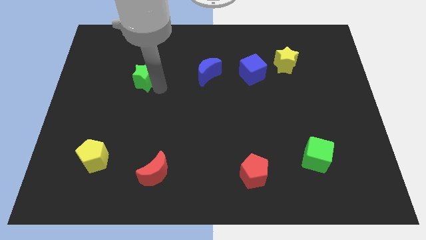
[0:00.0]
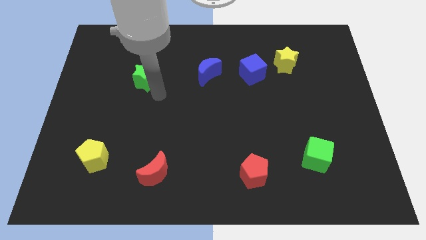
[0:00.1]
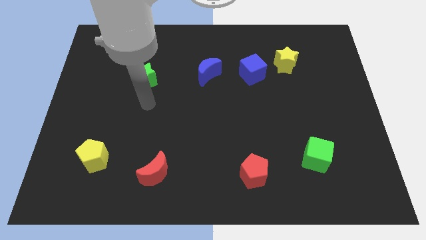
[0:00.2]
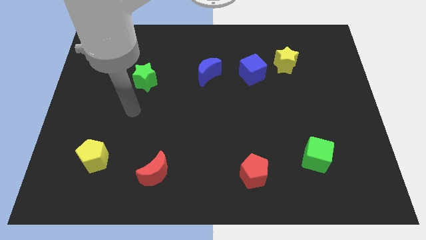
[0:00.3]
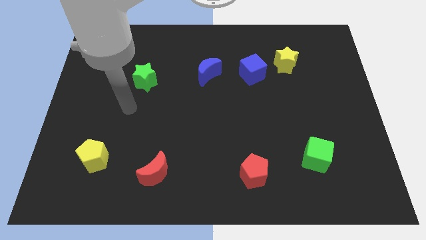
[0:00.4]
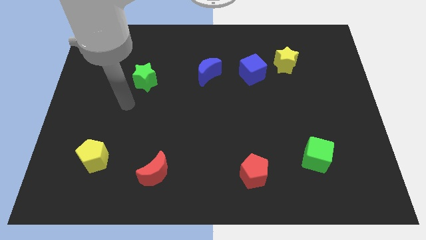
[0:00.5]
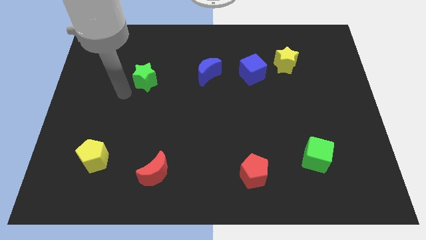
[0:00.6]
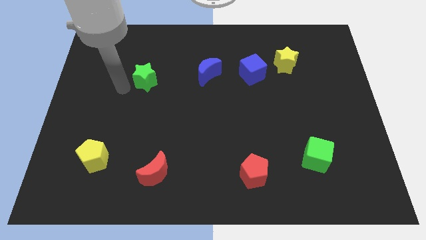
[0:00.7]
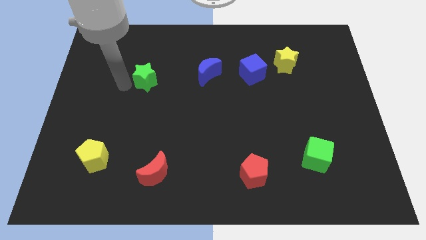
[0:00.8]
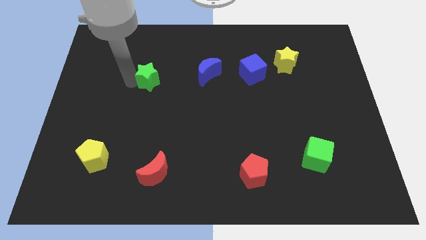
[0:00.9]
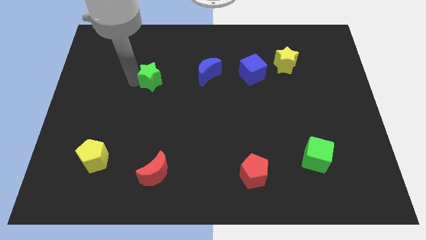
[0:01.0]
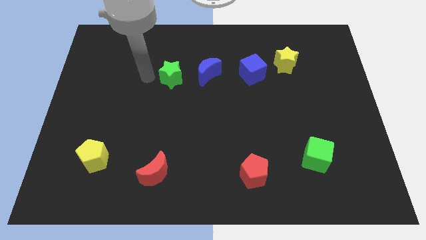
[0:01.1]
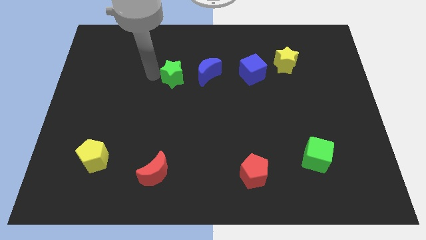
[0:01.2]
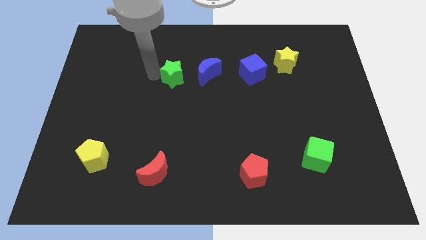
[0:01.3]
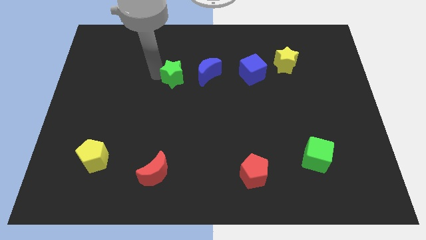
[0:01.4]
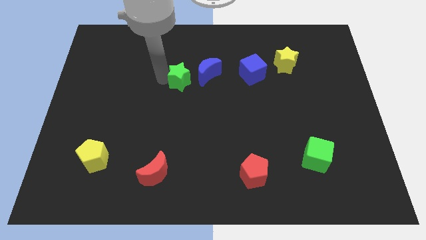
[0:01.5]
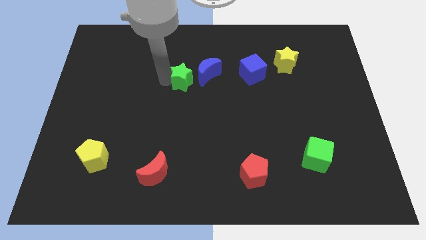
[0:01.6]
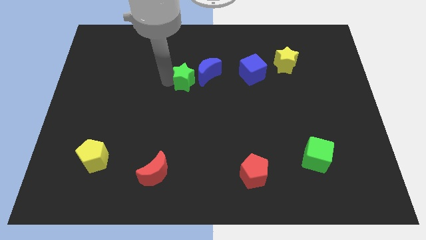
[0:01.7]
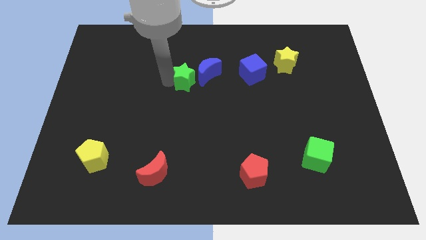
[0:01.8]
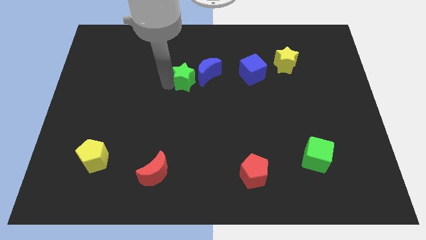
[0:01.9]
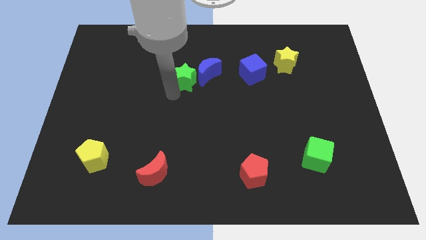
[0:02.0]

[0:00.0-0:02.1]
move the green star into the blue moon

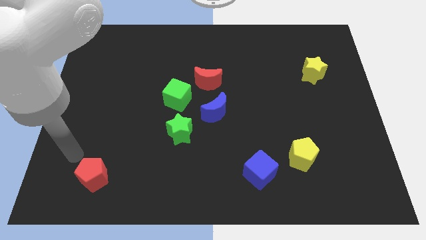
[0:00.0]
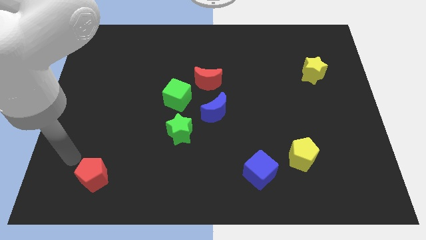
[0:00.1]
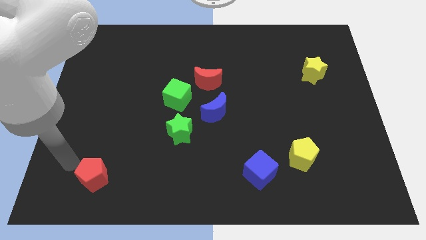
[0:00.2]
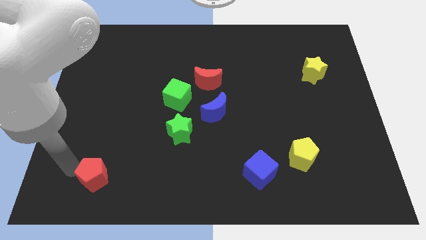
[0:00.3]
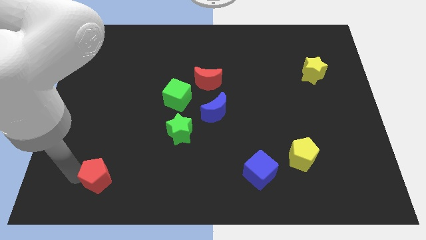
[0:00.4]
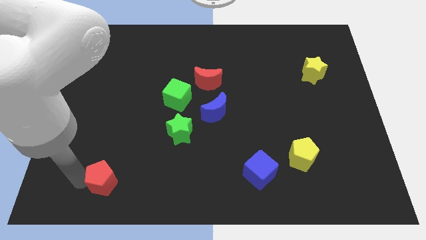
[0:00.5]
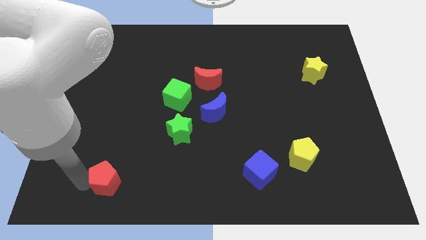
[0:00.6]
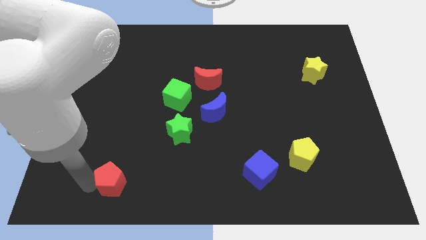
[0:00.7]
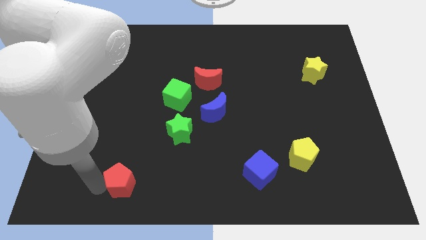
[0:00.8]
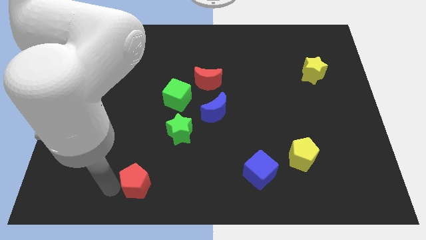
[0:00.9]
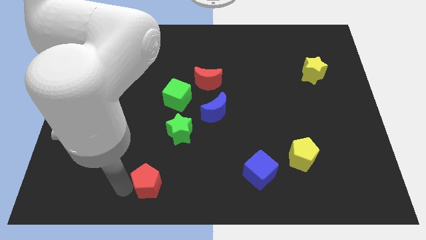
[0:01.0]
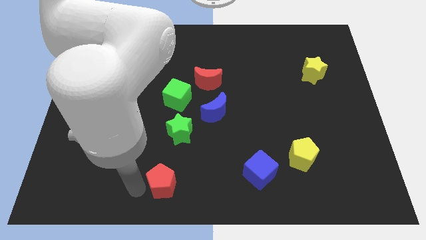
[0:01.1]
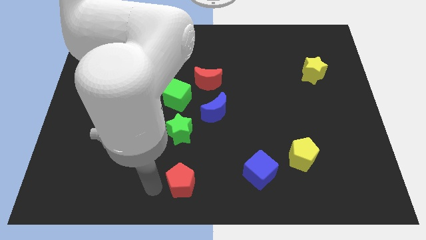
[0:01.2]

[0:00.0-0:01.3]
place red pentagon to the bottom of green star

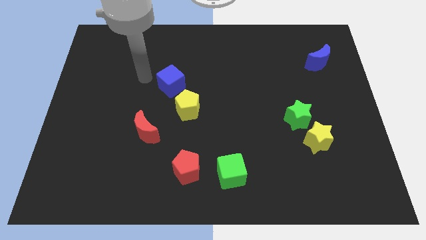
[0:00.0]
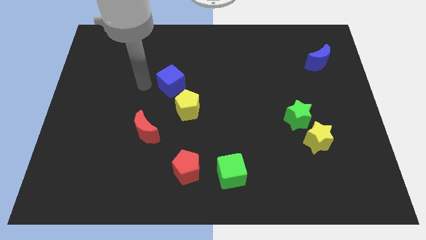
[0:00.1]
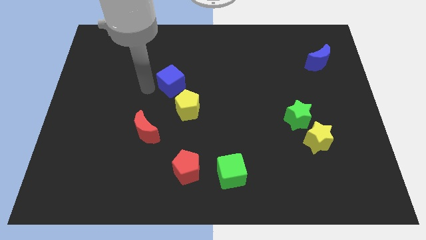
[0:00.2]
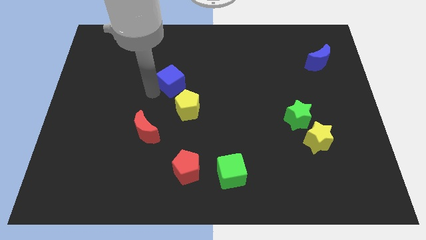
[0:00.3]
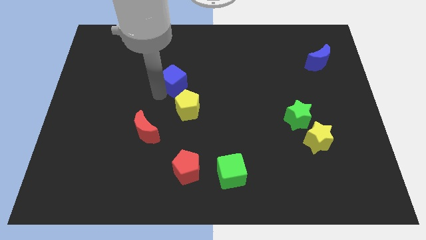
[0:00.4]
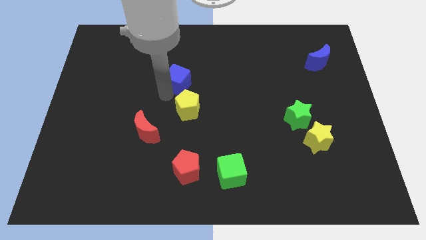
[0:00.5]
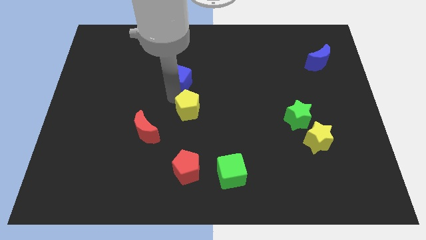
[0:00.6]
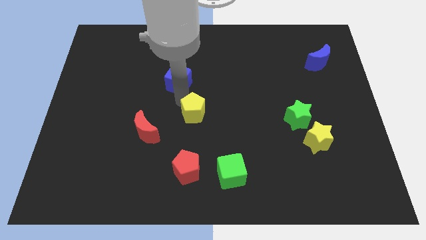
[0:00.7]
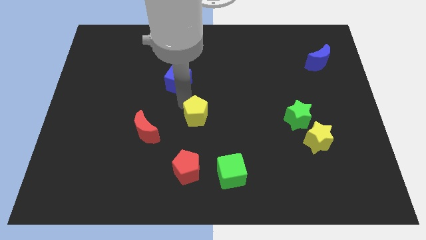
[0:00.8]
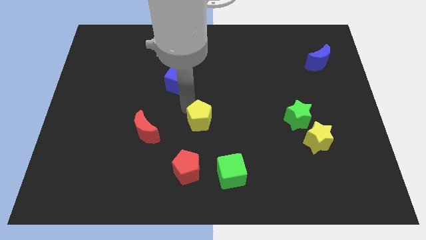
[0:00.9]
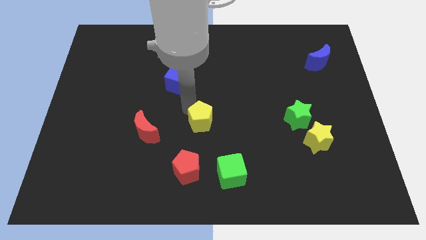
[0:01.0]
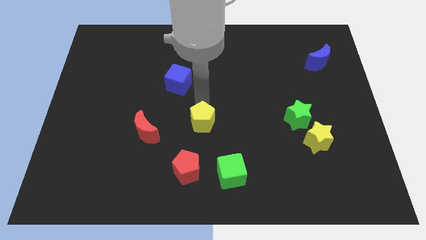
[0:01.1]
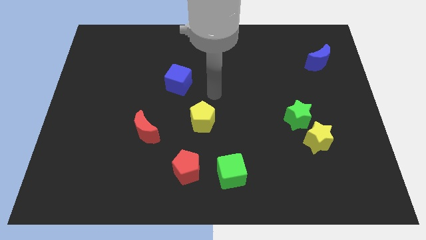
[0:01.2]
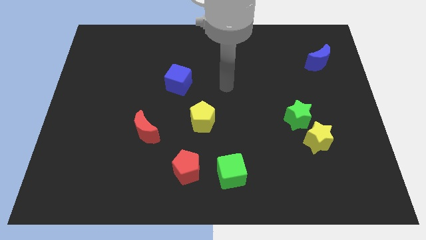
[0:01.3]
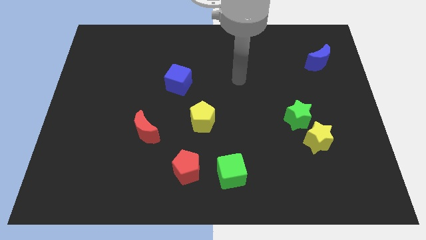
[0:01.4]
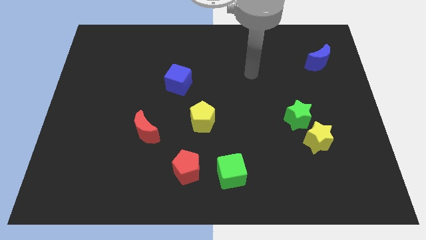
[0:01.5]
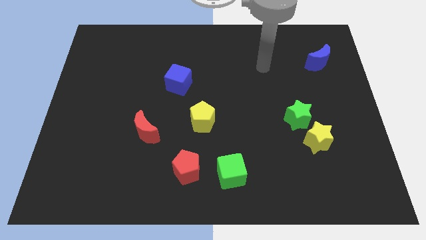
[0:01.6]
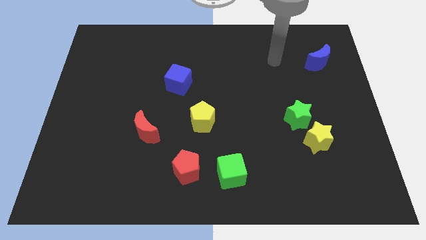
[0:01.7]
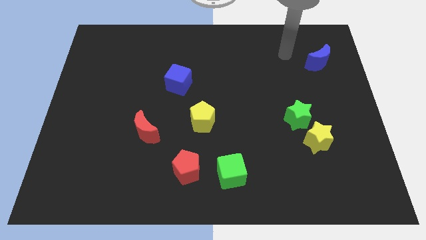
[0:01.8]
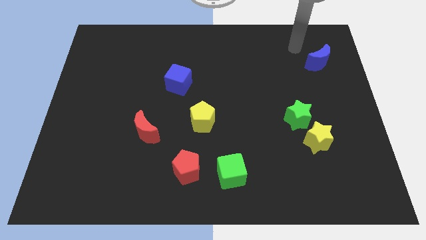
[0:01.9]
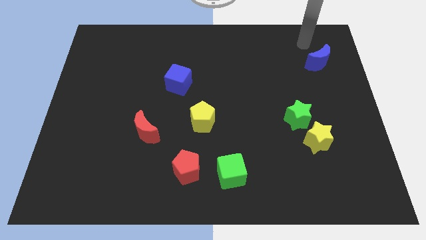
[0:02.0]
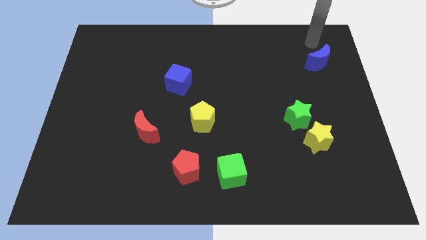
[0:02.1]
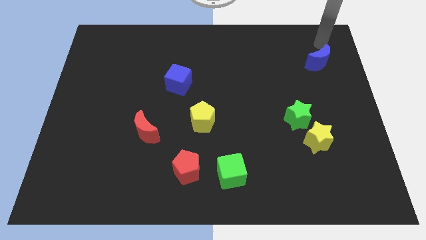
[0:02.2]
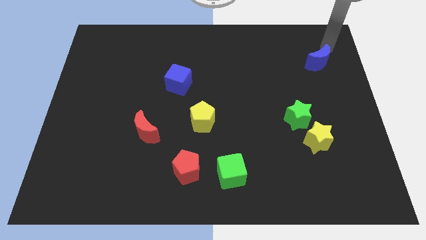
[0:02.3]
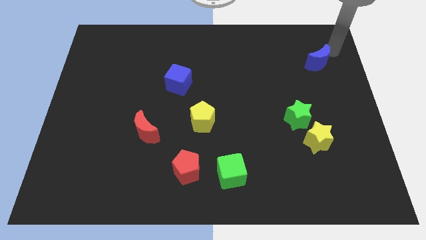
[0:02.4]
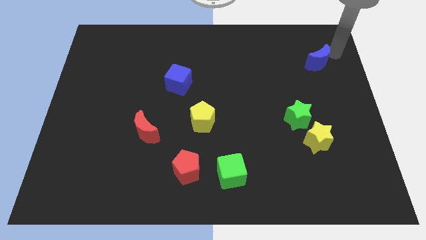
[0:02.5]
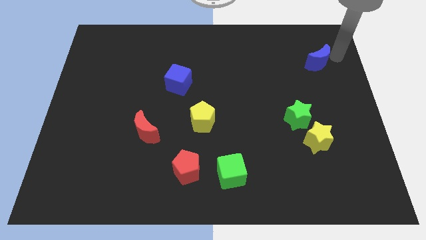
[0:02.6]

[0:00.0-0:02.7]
place the arm right to the blue moon

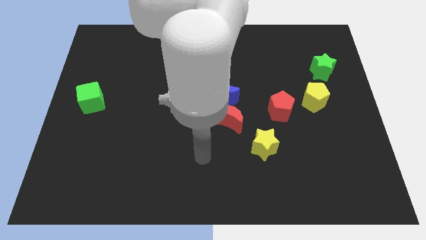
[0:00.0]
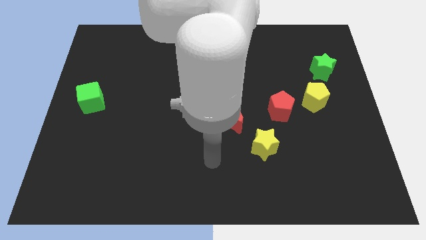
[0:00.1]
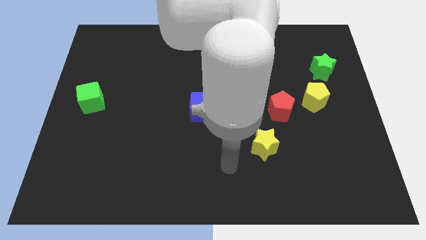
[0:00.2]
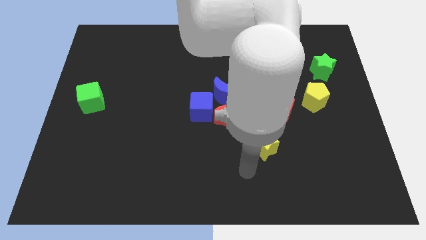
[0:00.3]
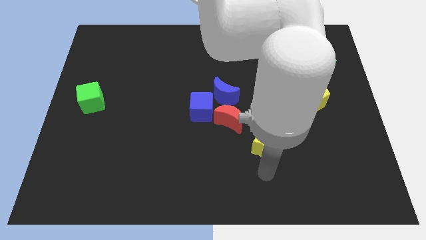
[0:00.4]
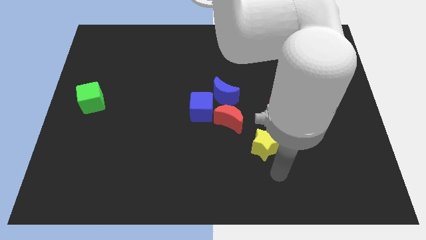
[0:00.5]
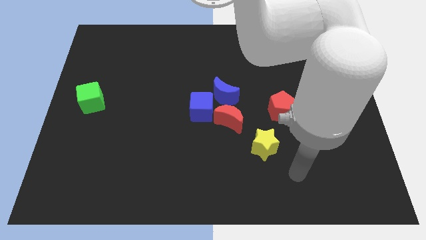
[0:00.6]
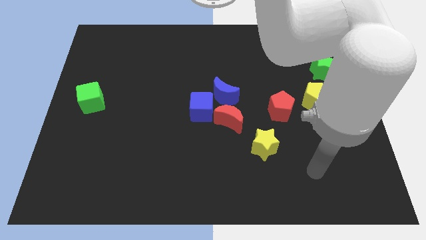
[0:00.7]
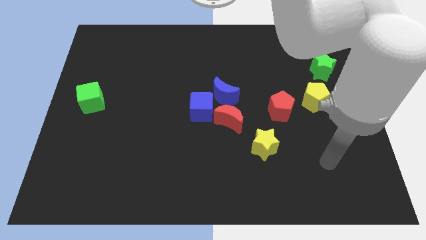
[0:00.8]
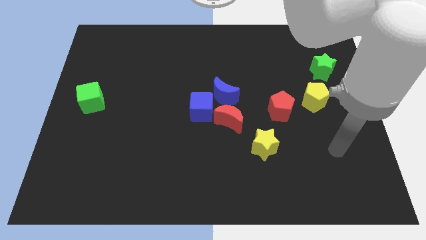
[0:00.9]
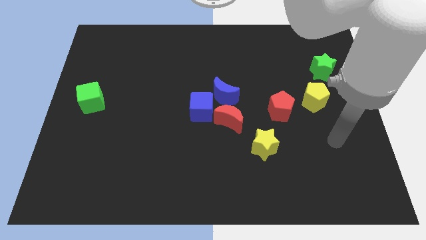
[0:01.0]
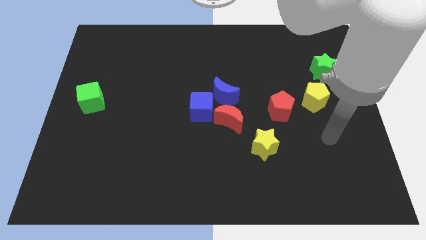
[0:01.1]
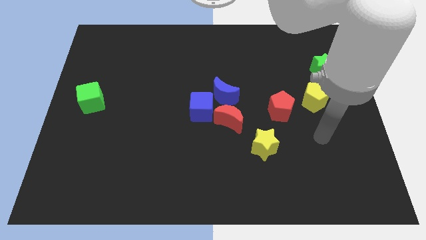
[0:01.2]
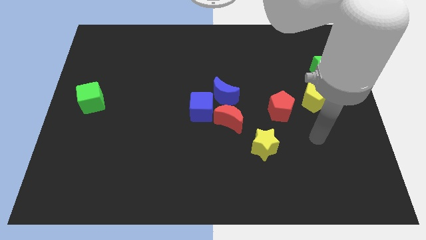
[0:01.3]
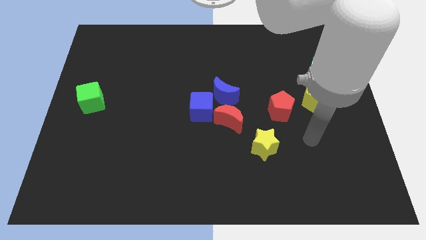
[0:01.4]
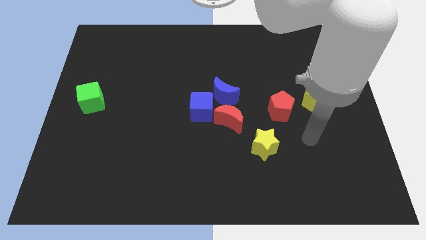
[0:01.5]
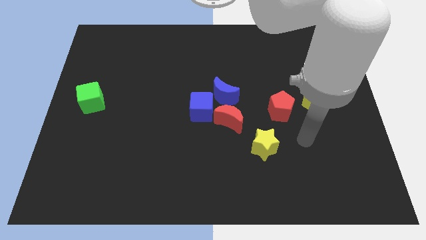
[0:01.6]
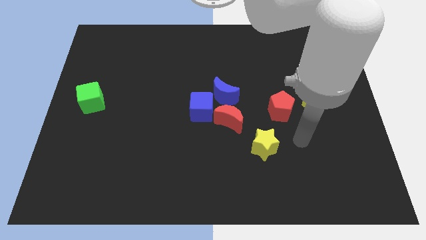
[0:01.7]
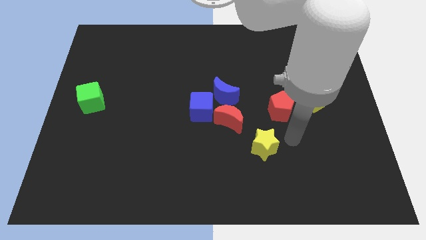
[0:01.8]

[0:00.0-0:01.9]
place the arm above the yellow star

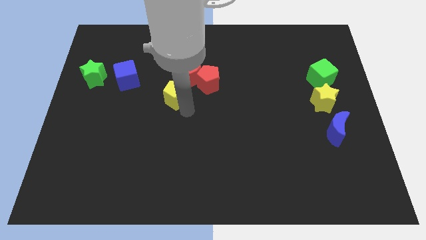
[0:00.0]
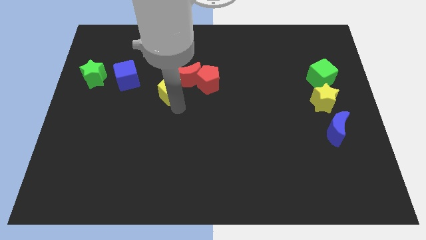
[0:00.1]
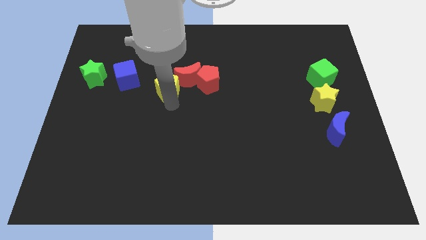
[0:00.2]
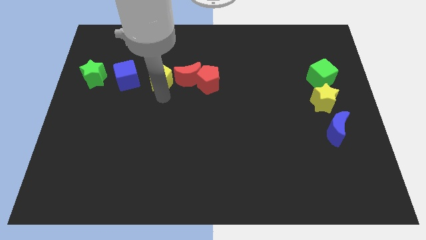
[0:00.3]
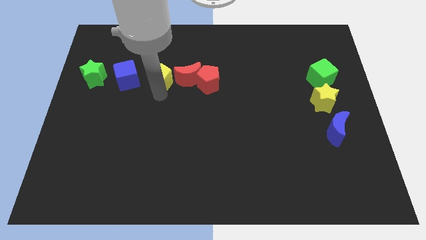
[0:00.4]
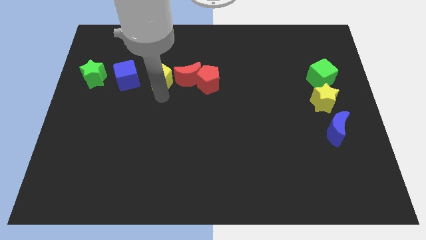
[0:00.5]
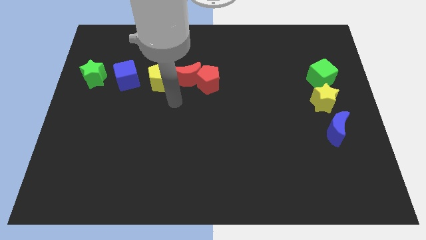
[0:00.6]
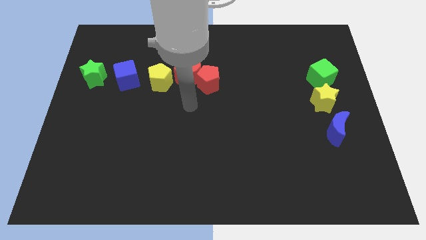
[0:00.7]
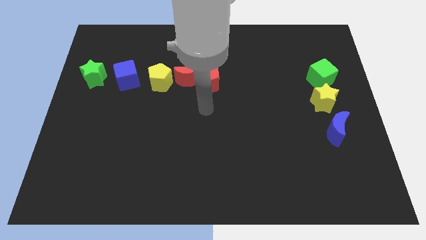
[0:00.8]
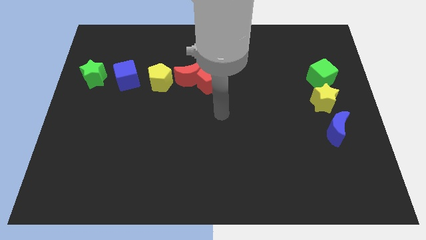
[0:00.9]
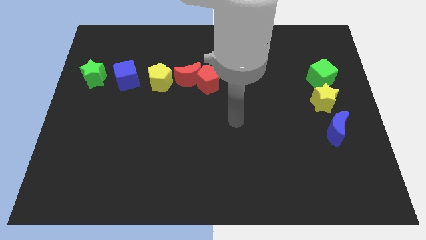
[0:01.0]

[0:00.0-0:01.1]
move yellow pentagon left beside red moon
